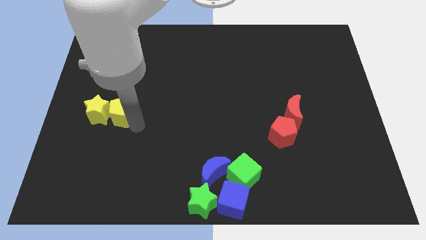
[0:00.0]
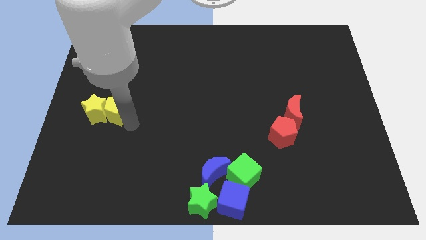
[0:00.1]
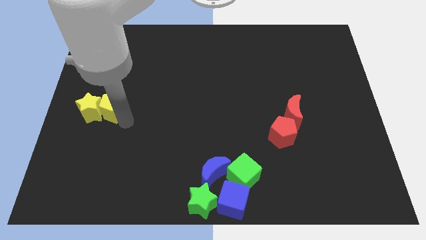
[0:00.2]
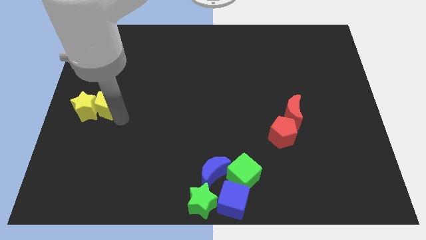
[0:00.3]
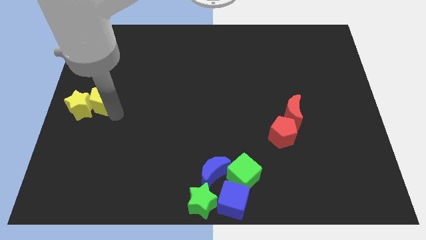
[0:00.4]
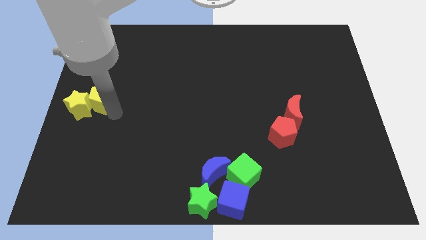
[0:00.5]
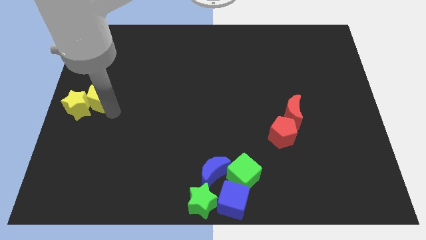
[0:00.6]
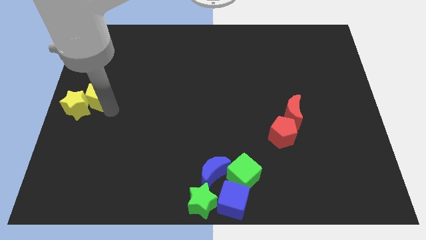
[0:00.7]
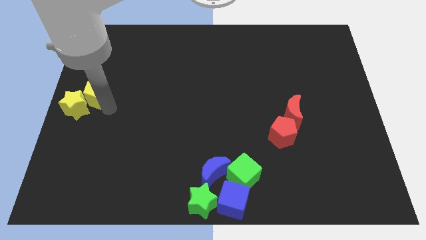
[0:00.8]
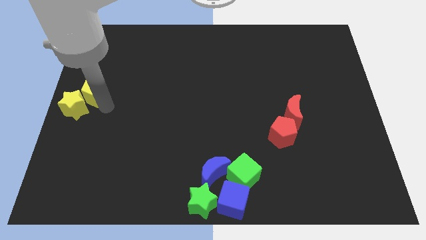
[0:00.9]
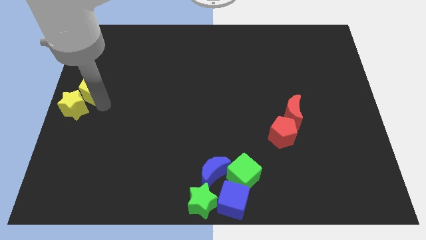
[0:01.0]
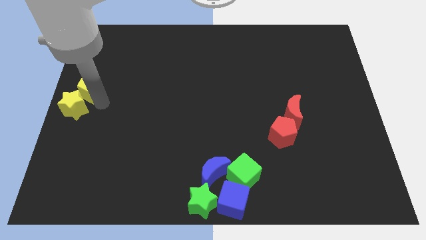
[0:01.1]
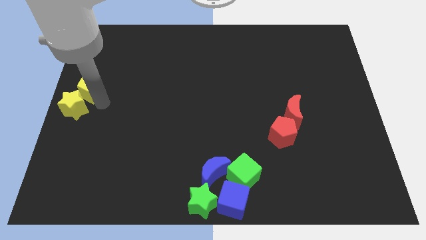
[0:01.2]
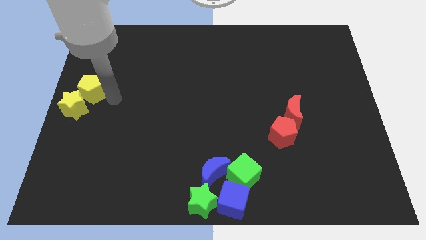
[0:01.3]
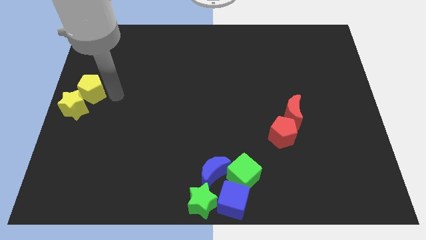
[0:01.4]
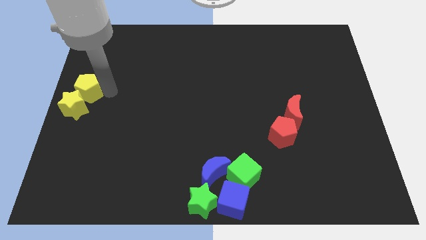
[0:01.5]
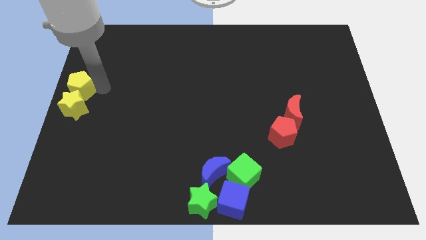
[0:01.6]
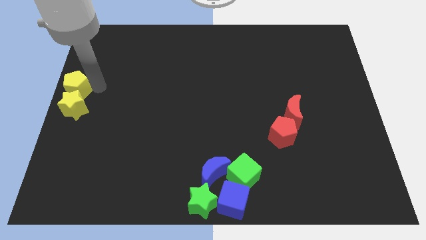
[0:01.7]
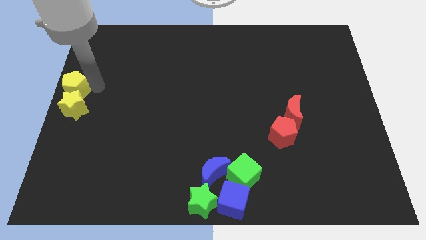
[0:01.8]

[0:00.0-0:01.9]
push the yellow star and the yellow pentagon to the center left side of the board

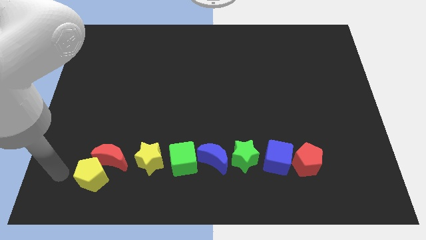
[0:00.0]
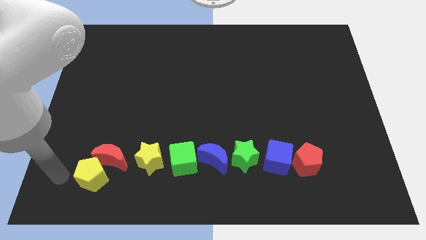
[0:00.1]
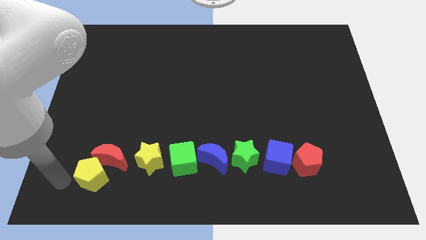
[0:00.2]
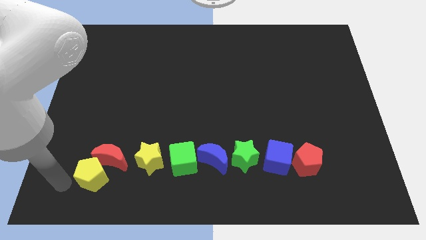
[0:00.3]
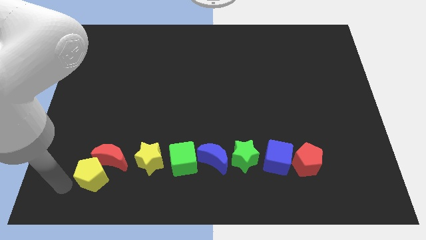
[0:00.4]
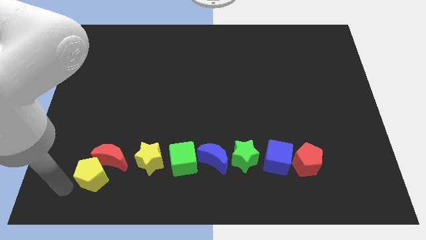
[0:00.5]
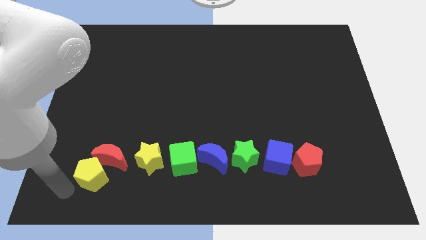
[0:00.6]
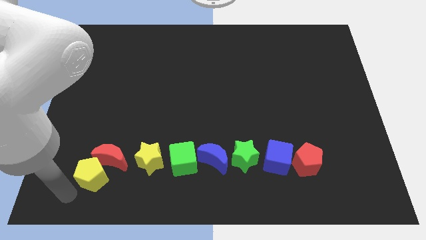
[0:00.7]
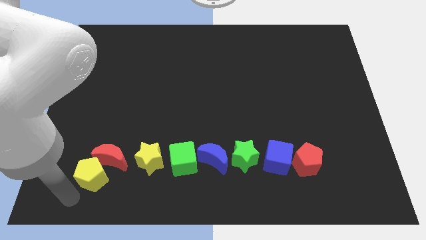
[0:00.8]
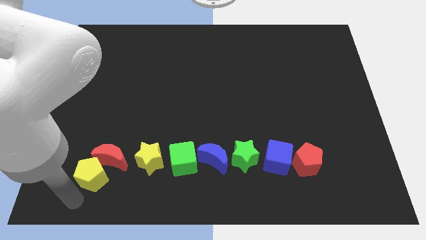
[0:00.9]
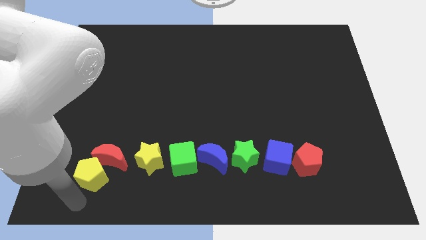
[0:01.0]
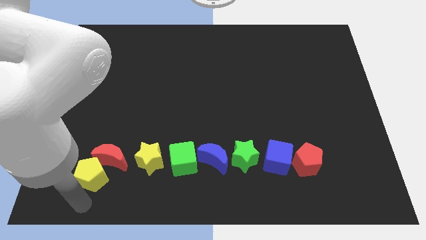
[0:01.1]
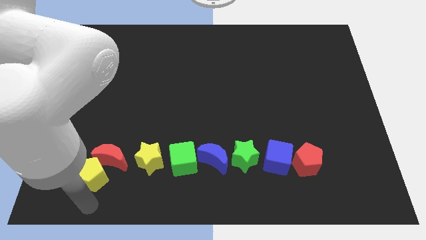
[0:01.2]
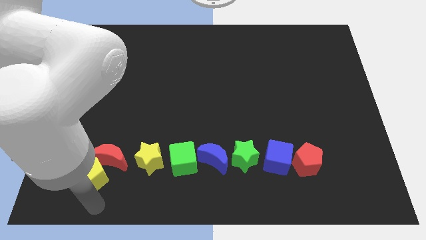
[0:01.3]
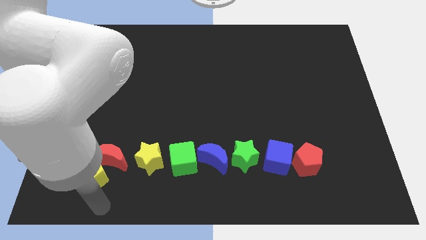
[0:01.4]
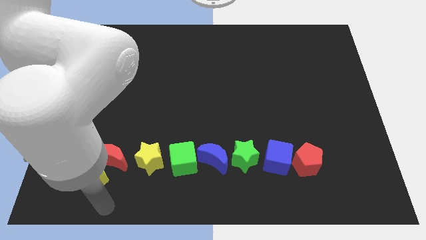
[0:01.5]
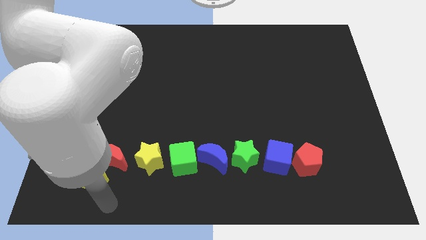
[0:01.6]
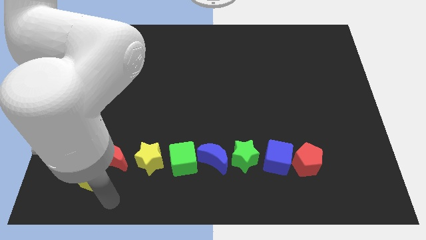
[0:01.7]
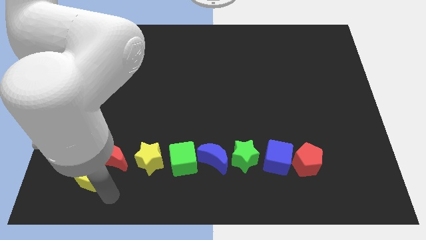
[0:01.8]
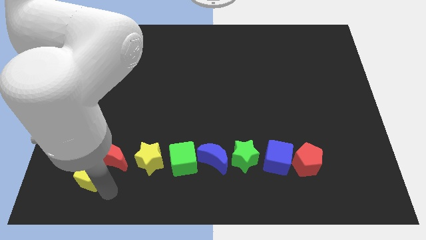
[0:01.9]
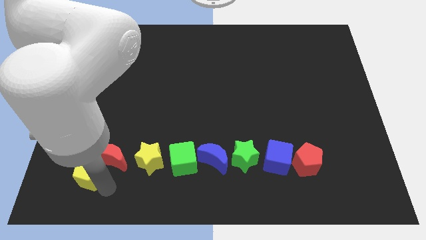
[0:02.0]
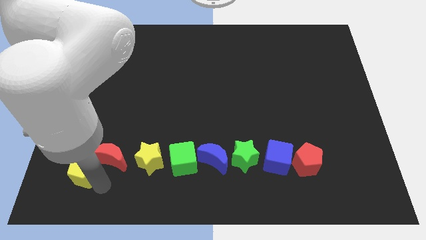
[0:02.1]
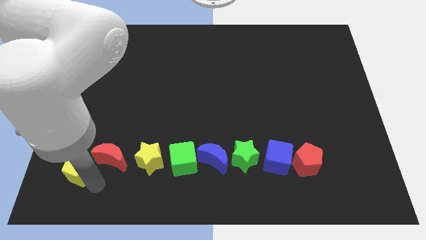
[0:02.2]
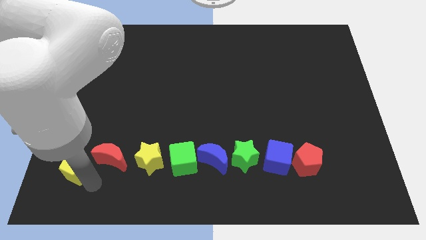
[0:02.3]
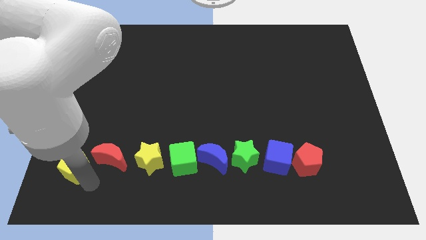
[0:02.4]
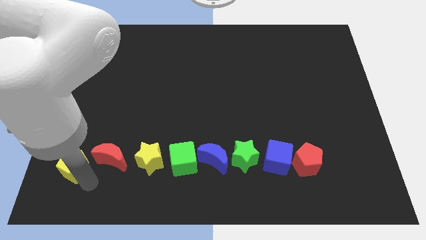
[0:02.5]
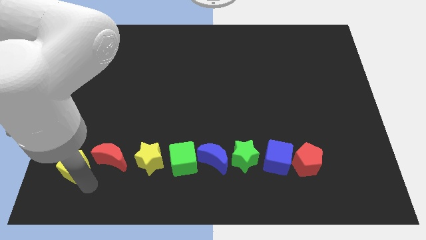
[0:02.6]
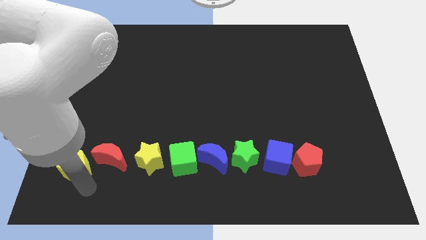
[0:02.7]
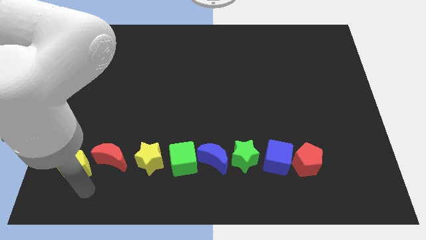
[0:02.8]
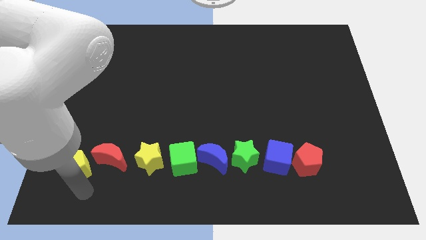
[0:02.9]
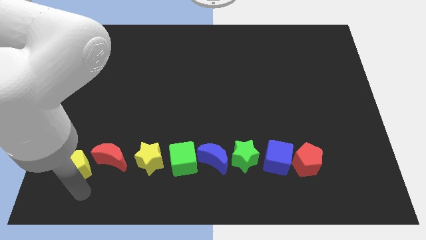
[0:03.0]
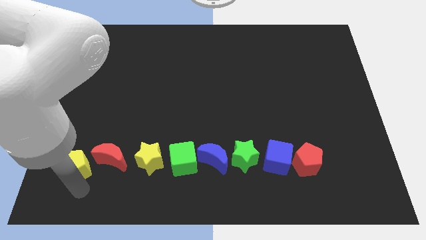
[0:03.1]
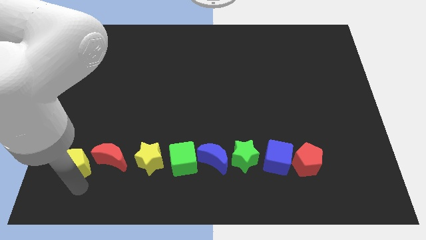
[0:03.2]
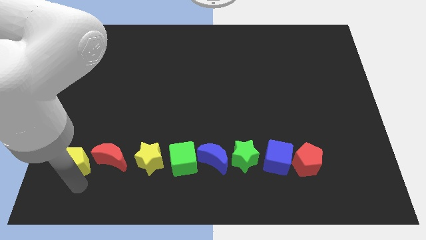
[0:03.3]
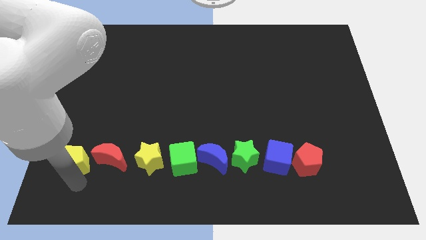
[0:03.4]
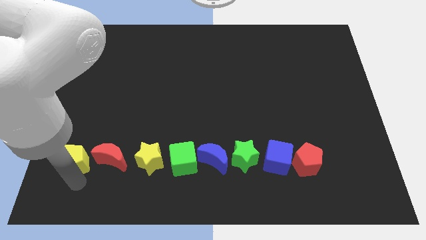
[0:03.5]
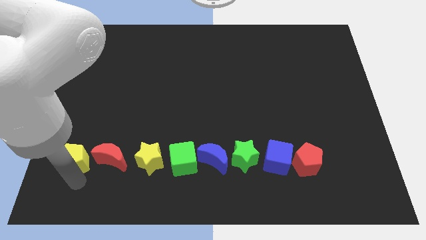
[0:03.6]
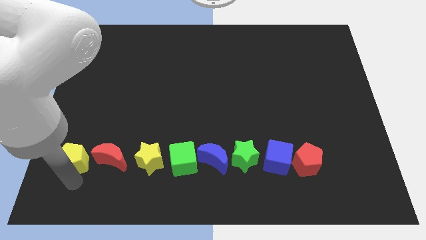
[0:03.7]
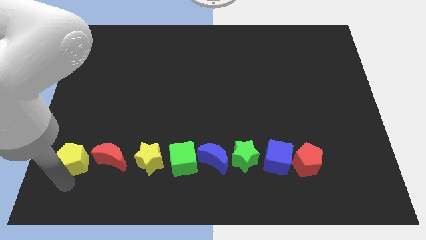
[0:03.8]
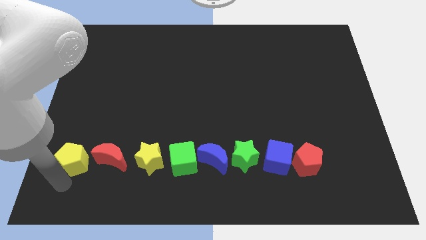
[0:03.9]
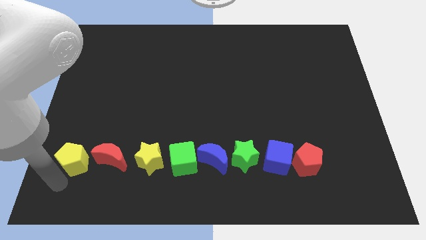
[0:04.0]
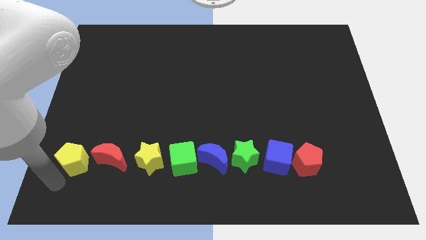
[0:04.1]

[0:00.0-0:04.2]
push the yellow pentagon parallel left to the red moon

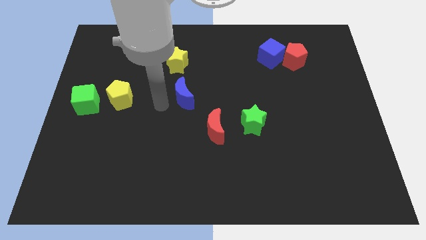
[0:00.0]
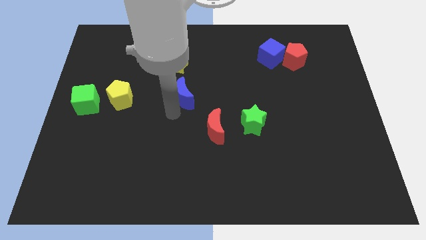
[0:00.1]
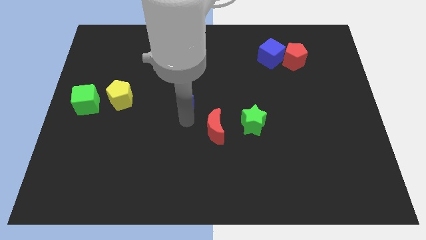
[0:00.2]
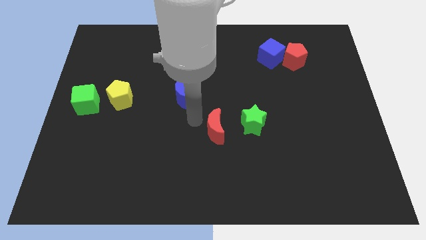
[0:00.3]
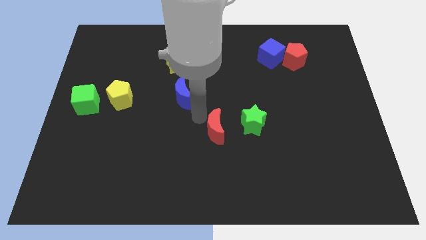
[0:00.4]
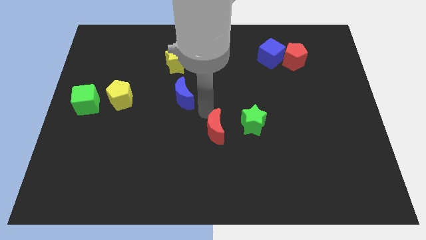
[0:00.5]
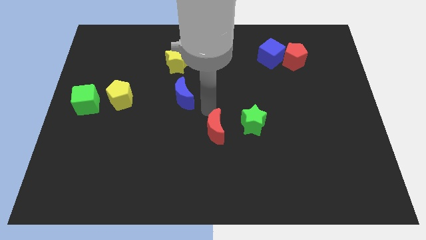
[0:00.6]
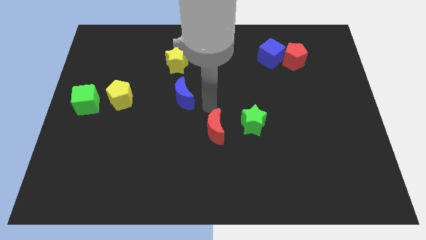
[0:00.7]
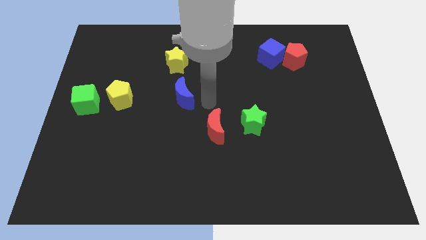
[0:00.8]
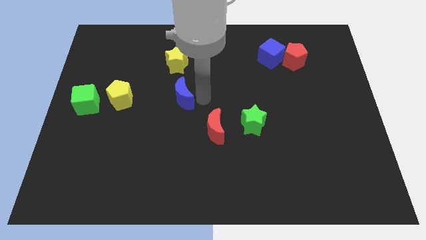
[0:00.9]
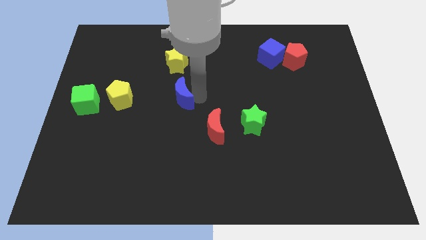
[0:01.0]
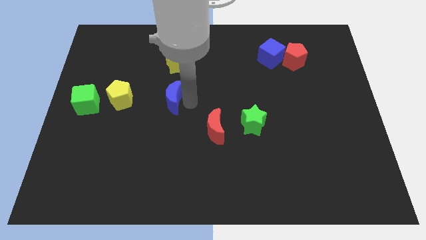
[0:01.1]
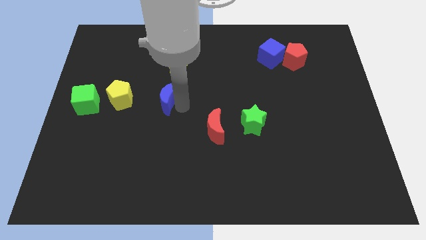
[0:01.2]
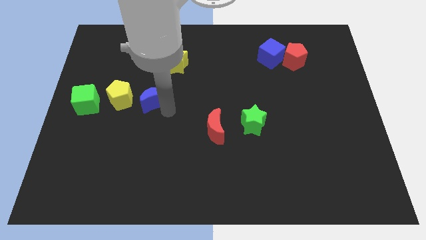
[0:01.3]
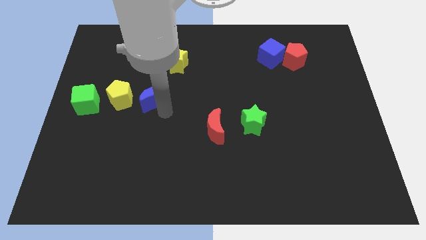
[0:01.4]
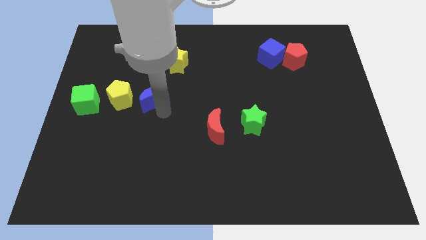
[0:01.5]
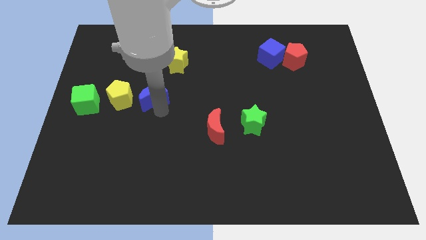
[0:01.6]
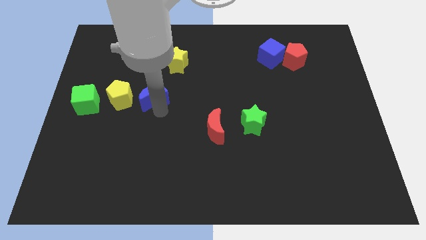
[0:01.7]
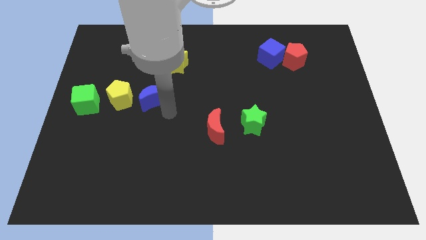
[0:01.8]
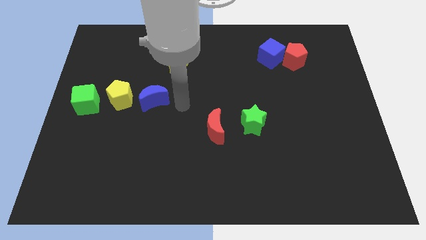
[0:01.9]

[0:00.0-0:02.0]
place blue moon to the right of yellow pentagon

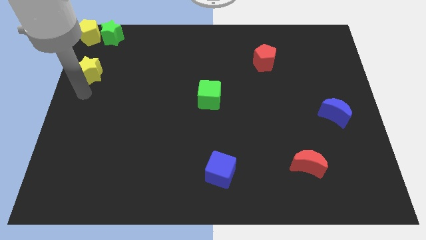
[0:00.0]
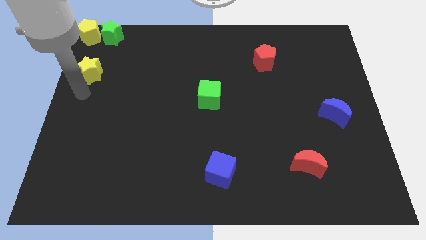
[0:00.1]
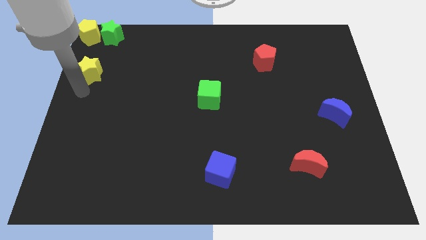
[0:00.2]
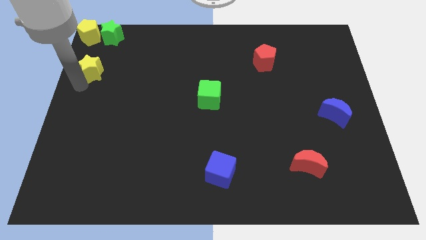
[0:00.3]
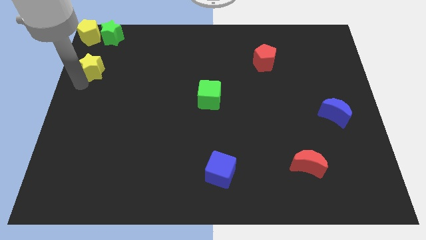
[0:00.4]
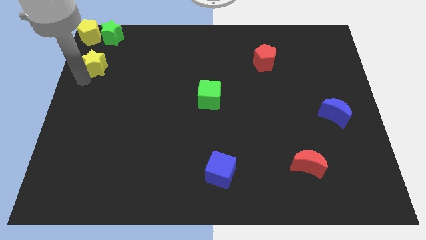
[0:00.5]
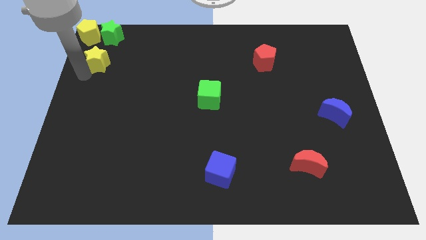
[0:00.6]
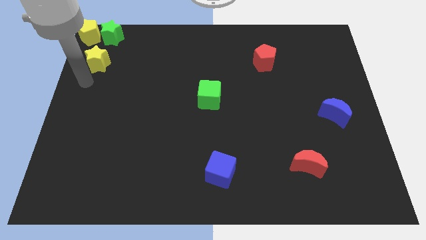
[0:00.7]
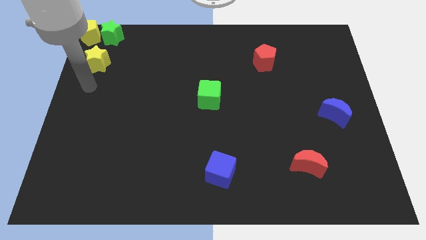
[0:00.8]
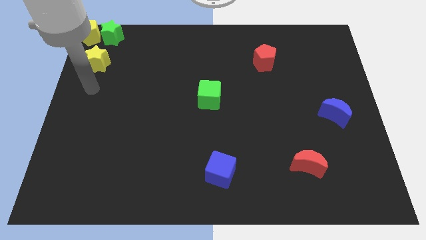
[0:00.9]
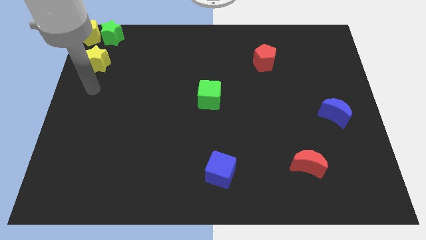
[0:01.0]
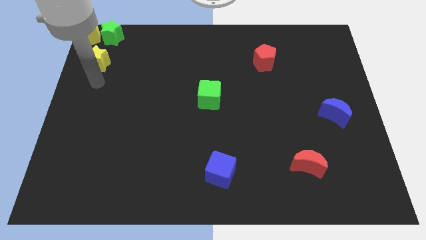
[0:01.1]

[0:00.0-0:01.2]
push the yellow star towards the yellow pentagon
